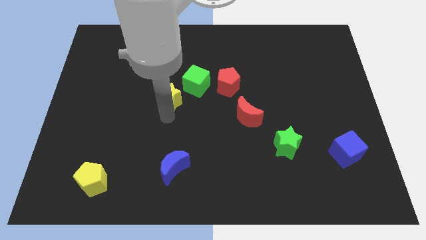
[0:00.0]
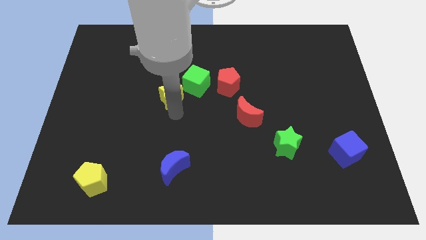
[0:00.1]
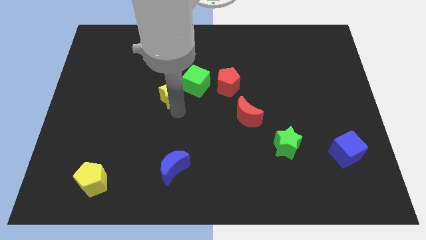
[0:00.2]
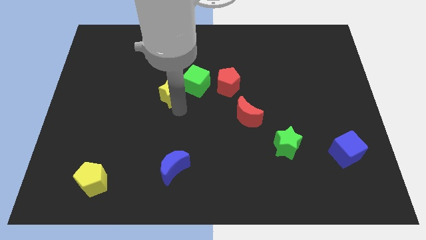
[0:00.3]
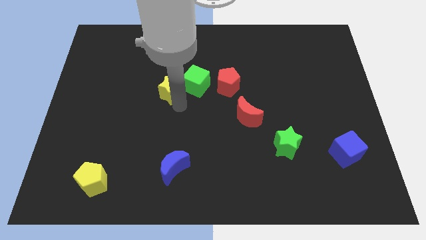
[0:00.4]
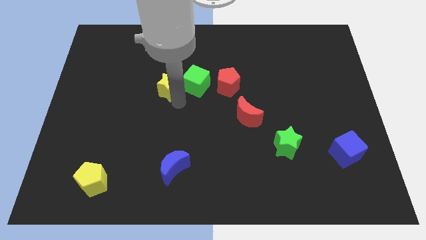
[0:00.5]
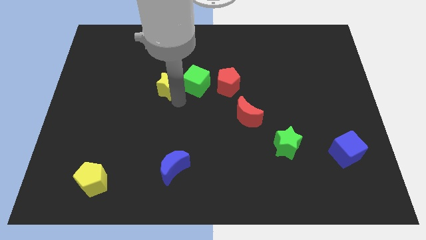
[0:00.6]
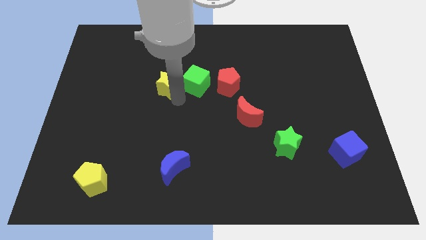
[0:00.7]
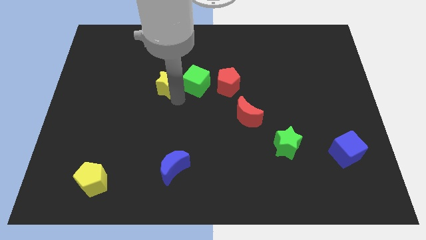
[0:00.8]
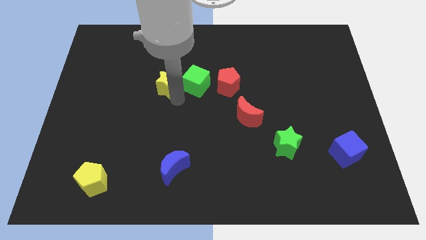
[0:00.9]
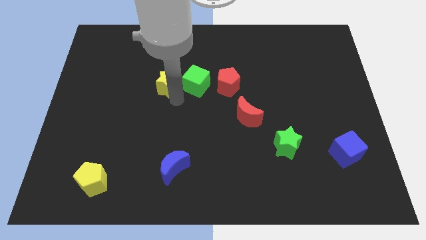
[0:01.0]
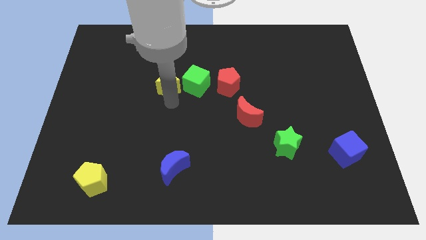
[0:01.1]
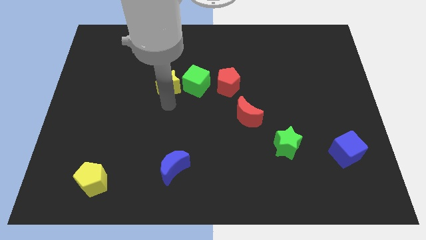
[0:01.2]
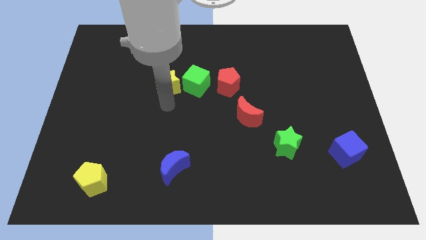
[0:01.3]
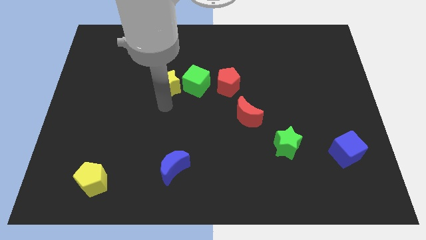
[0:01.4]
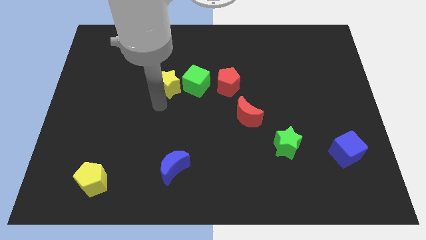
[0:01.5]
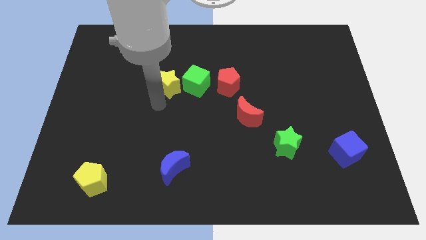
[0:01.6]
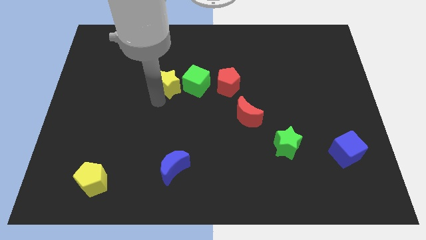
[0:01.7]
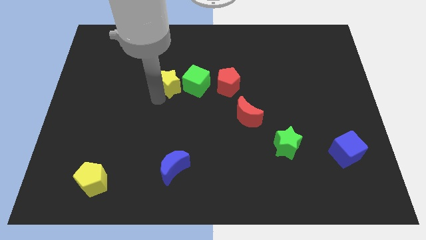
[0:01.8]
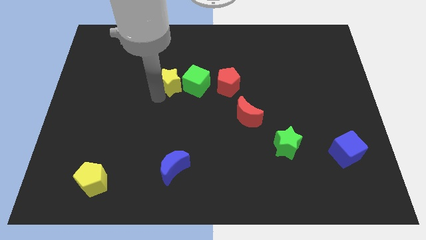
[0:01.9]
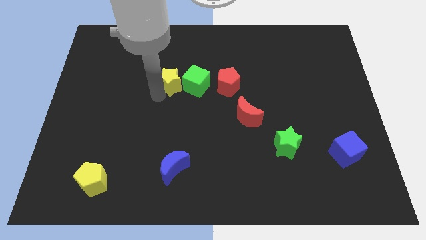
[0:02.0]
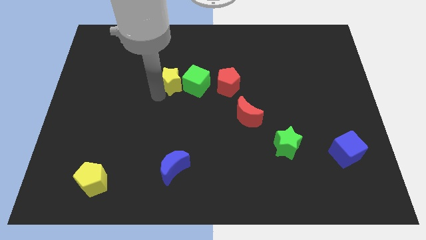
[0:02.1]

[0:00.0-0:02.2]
place the yellow star to the left side of green cube

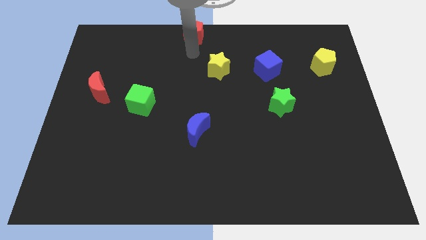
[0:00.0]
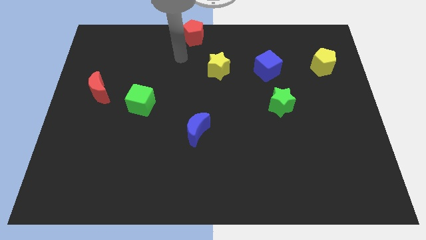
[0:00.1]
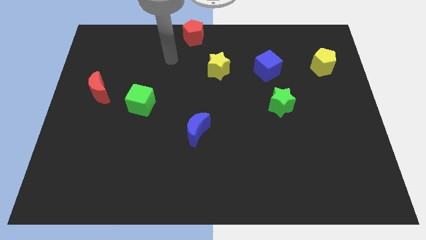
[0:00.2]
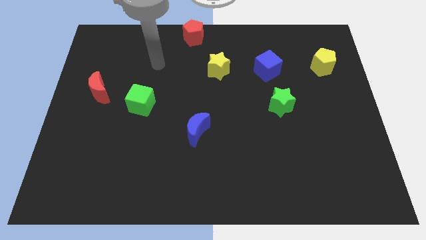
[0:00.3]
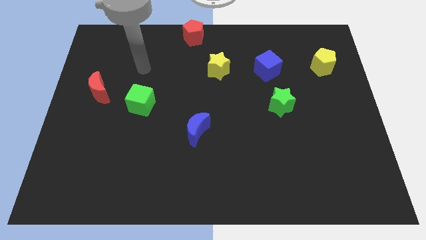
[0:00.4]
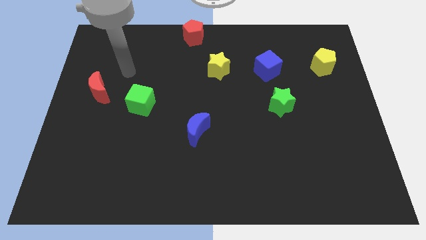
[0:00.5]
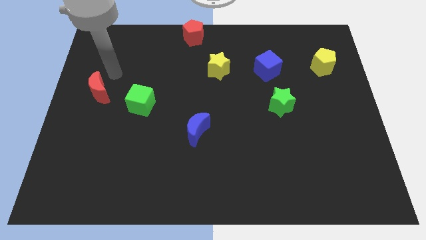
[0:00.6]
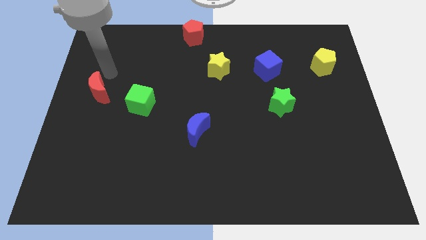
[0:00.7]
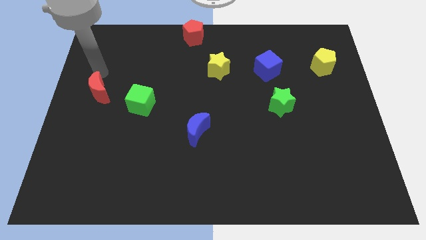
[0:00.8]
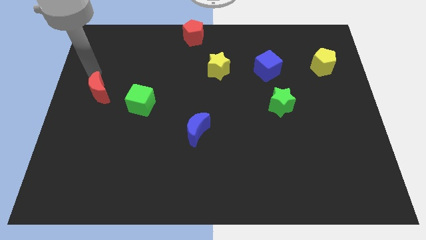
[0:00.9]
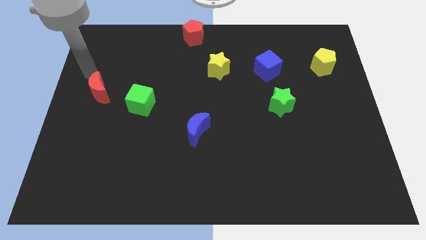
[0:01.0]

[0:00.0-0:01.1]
move your arm to the top of red moon

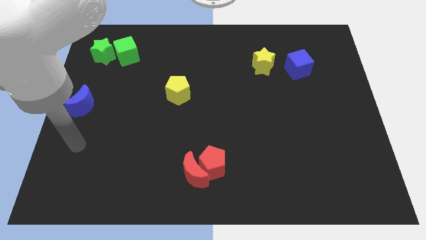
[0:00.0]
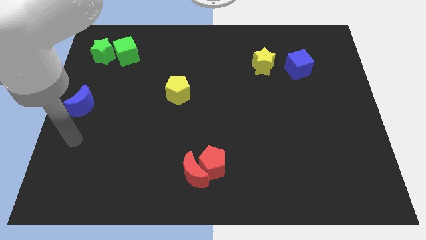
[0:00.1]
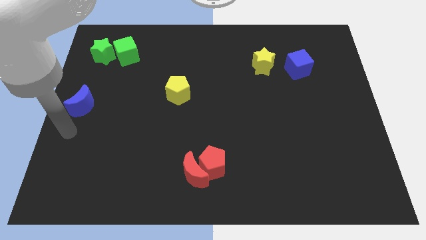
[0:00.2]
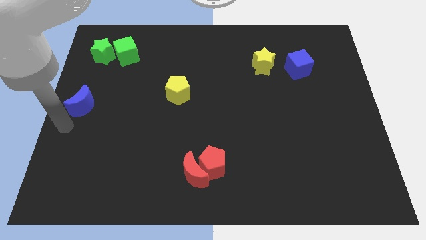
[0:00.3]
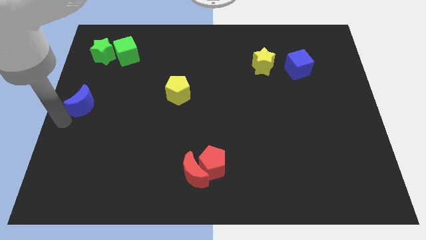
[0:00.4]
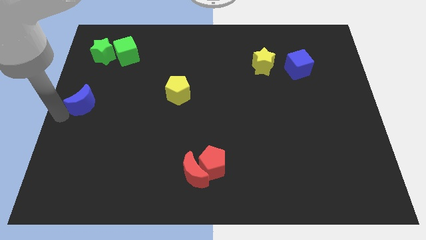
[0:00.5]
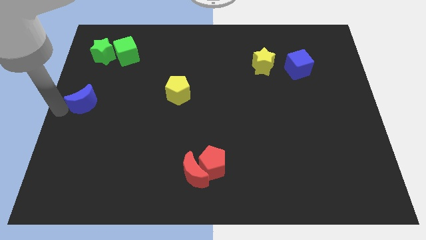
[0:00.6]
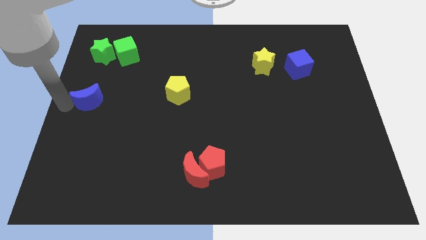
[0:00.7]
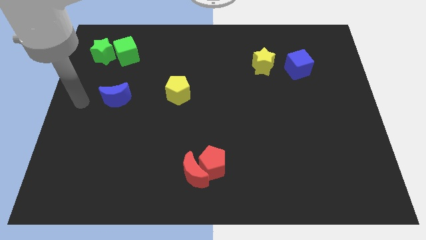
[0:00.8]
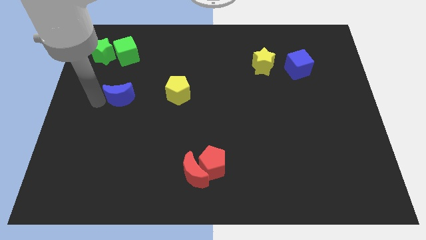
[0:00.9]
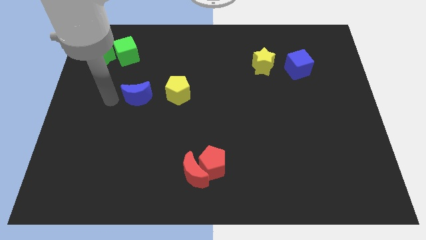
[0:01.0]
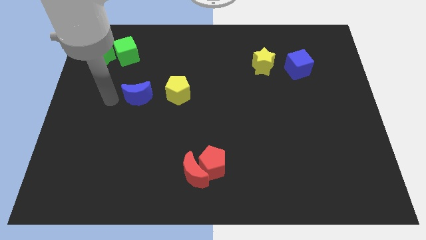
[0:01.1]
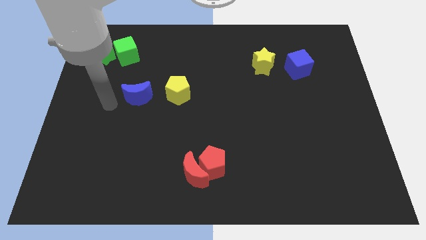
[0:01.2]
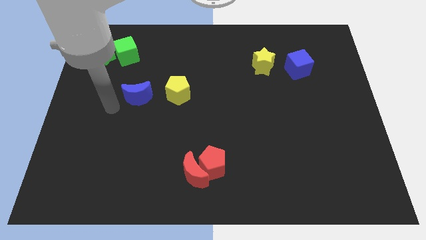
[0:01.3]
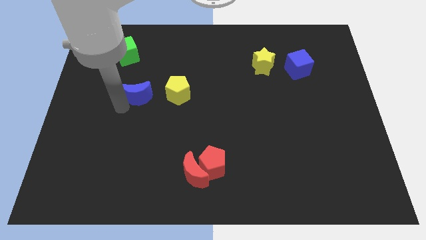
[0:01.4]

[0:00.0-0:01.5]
push blue moon to the bottom of green cube

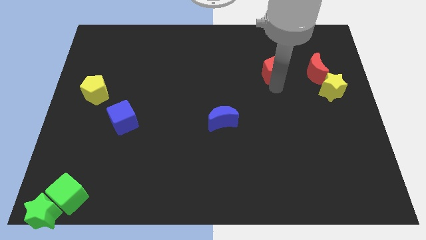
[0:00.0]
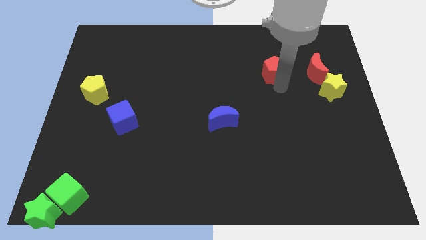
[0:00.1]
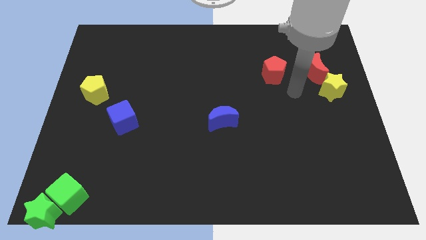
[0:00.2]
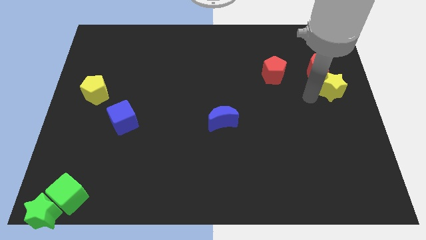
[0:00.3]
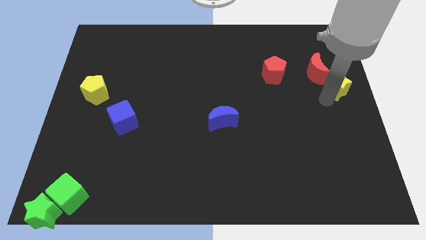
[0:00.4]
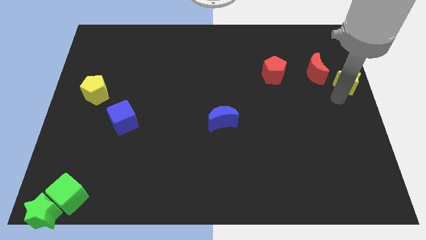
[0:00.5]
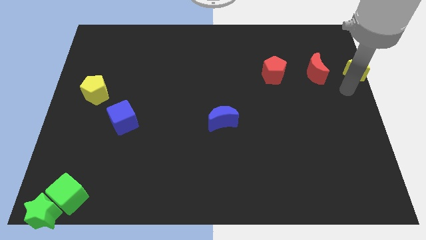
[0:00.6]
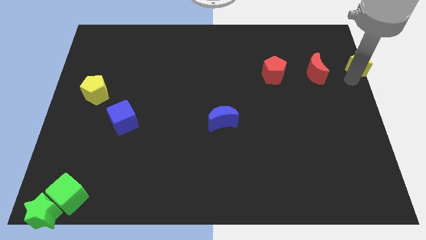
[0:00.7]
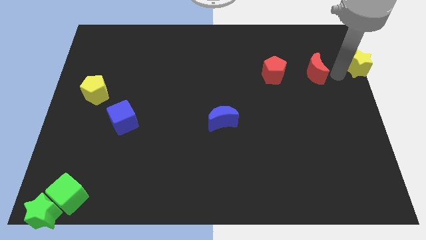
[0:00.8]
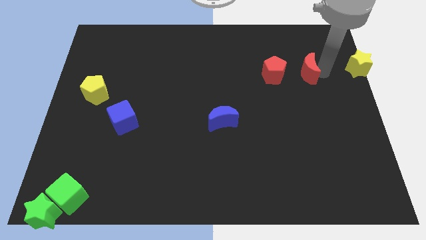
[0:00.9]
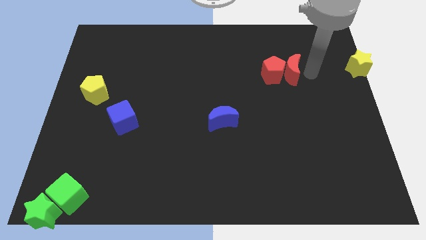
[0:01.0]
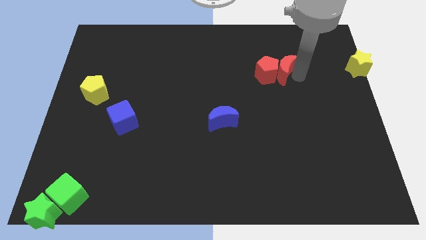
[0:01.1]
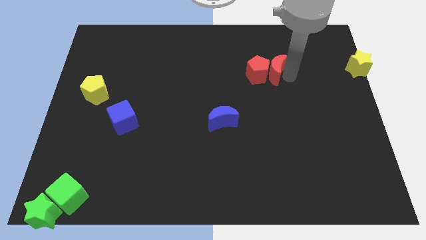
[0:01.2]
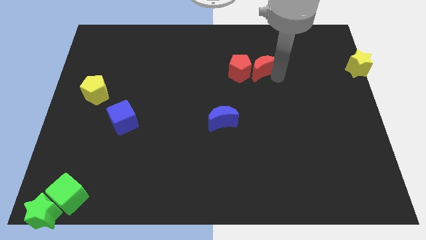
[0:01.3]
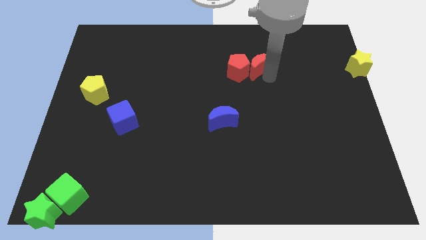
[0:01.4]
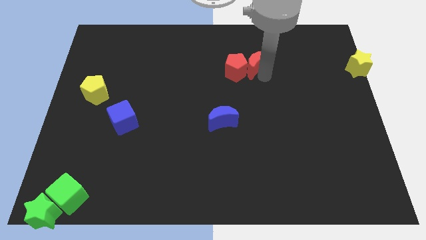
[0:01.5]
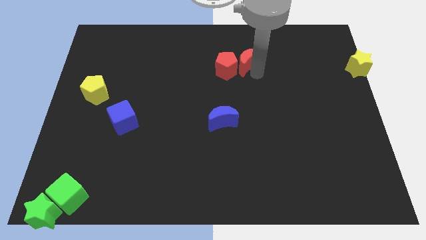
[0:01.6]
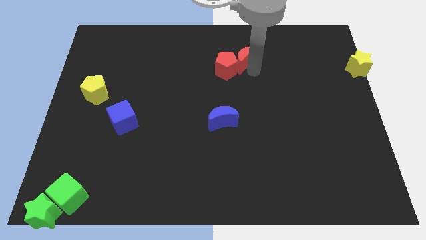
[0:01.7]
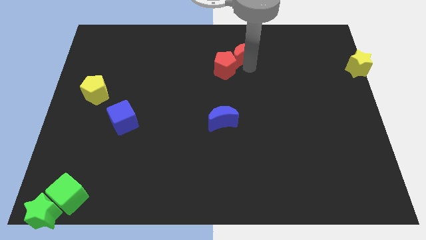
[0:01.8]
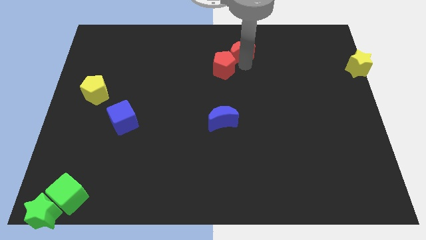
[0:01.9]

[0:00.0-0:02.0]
push red pentagon on the top of the blue crescent

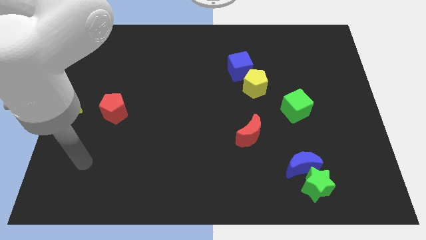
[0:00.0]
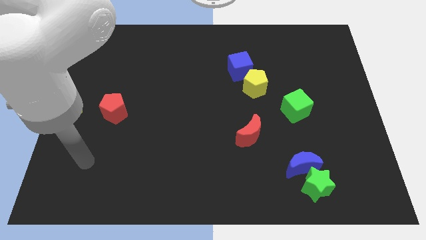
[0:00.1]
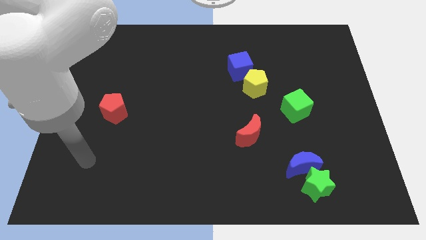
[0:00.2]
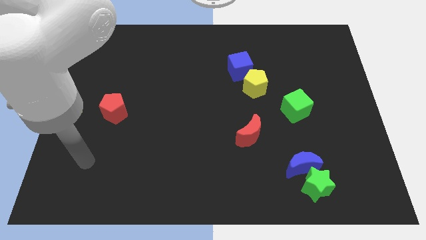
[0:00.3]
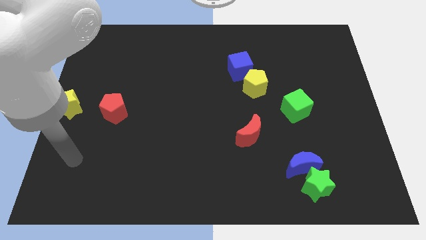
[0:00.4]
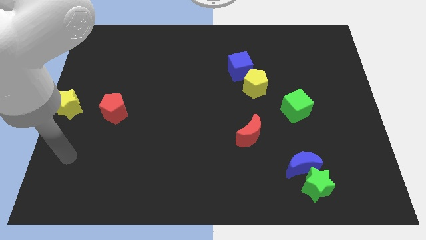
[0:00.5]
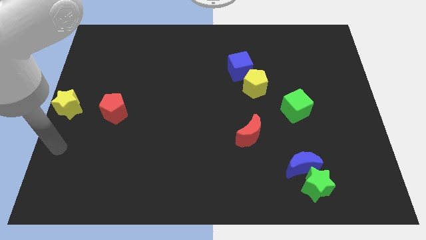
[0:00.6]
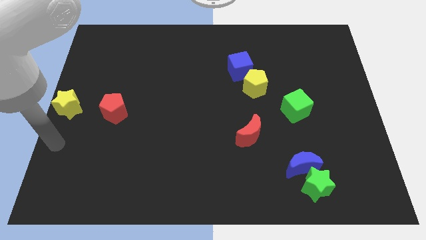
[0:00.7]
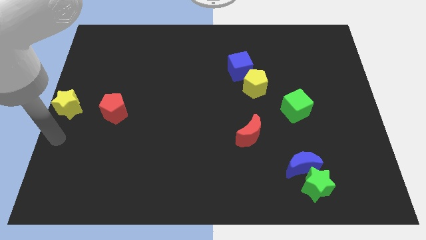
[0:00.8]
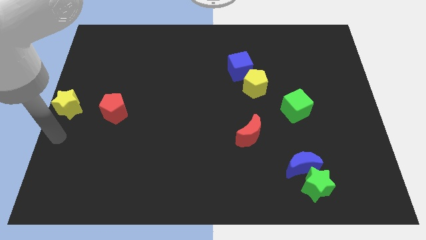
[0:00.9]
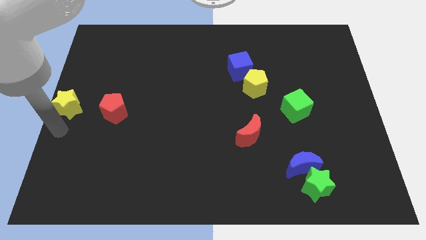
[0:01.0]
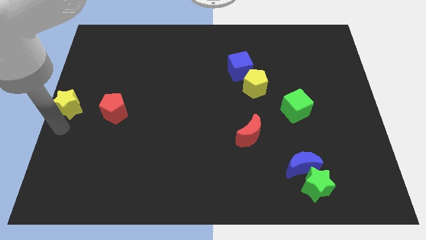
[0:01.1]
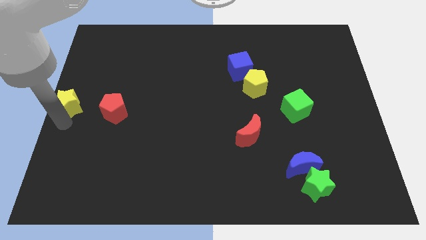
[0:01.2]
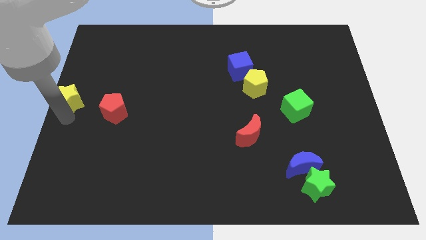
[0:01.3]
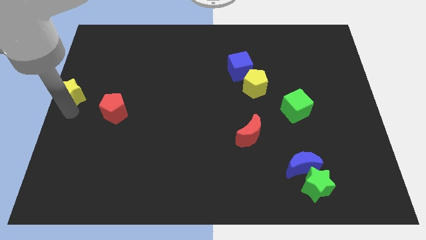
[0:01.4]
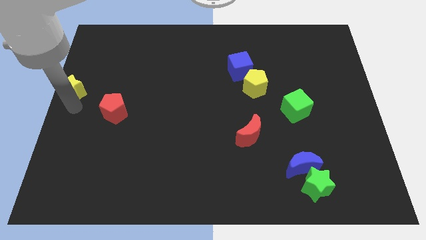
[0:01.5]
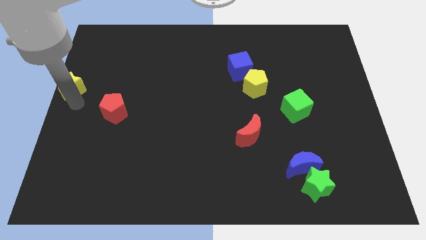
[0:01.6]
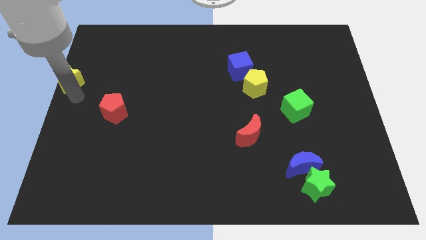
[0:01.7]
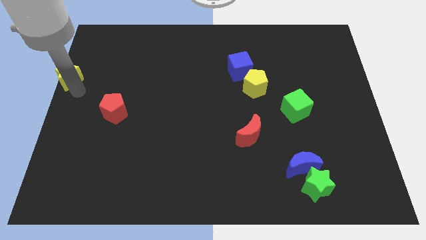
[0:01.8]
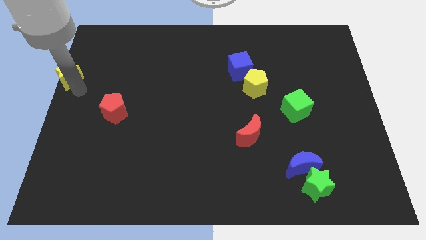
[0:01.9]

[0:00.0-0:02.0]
drag the yellow star diagonally top left to the red pentagon

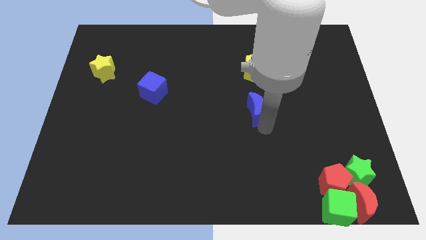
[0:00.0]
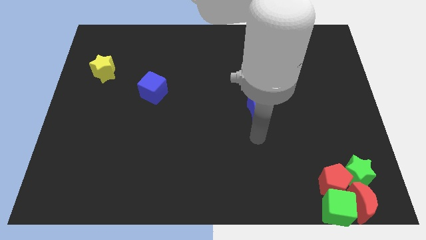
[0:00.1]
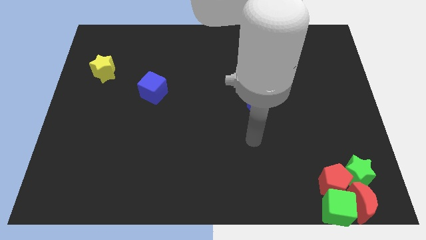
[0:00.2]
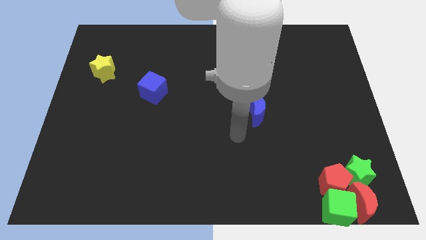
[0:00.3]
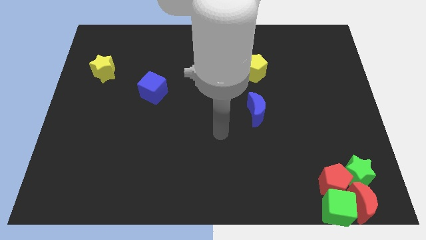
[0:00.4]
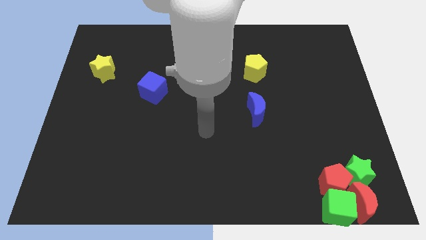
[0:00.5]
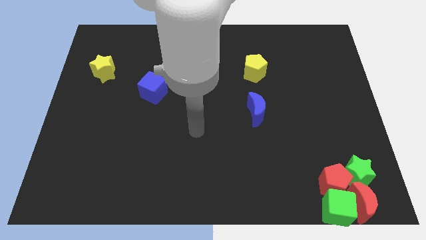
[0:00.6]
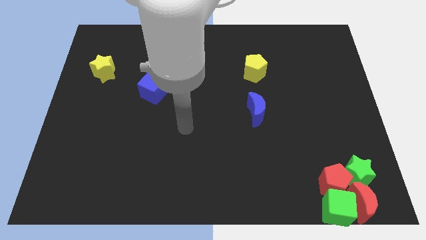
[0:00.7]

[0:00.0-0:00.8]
move the arm away from the blue moon
